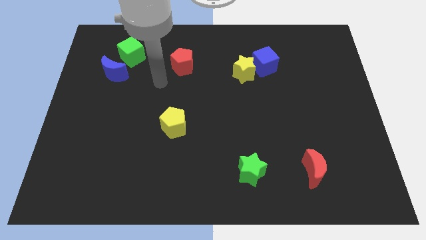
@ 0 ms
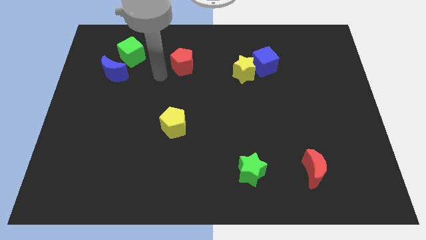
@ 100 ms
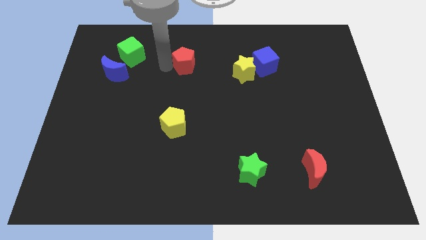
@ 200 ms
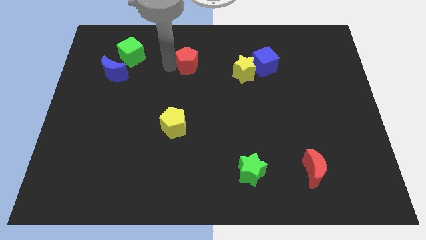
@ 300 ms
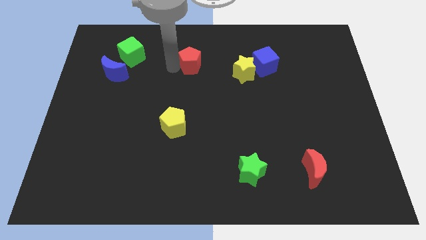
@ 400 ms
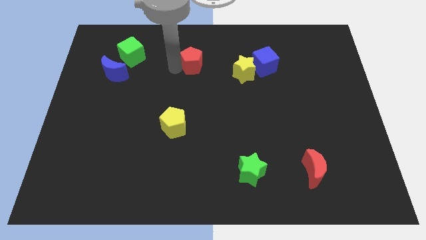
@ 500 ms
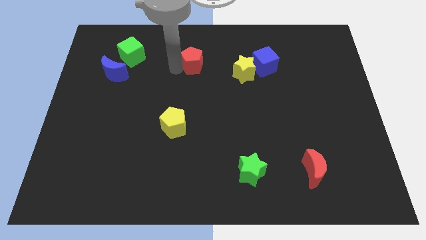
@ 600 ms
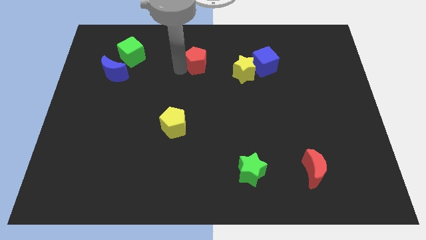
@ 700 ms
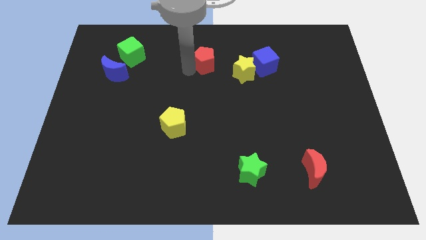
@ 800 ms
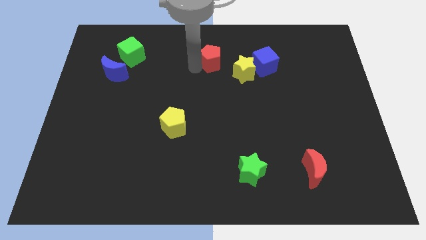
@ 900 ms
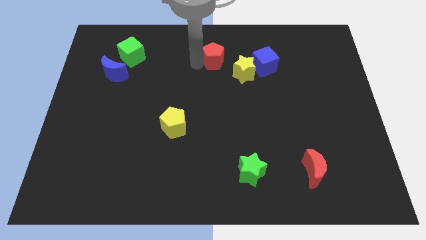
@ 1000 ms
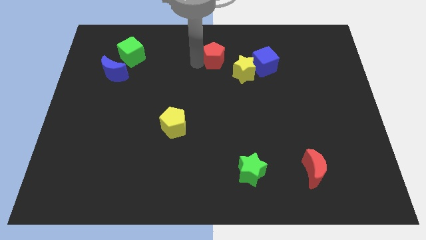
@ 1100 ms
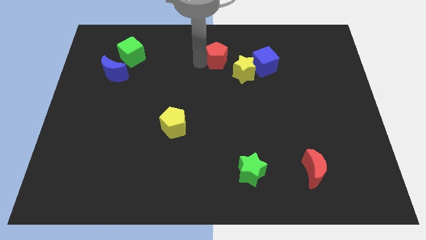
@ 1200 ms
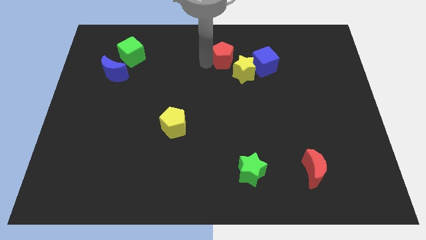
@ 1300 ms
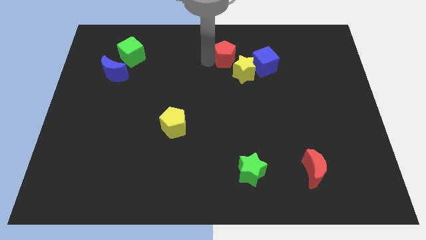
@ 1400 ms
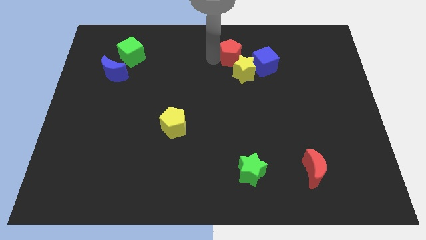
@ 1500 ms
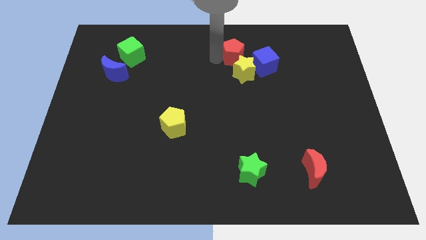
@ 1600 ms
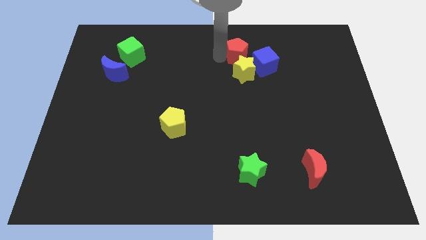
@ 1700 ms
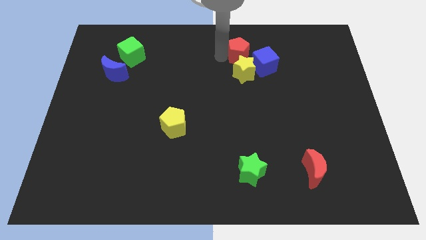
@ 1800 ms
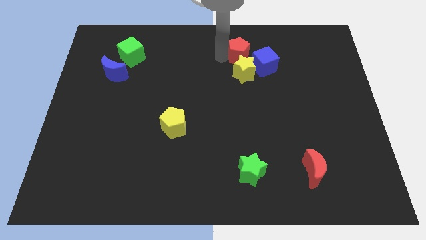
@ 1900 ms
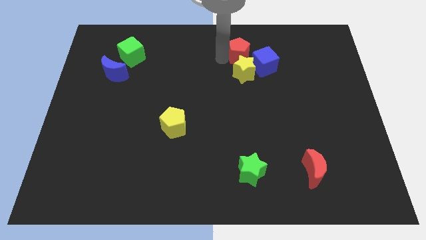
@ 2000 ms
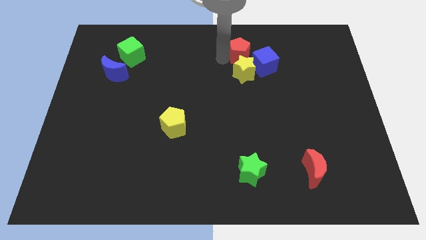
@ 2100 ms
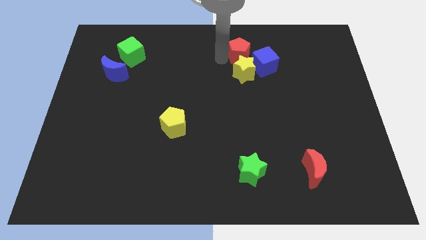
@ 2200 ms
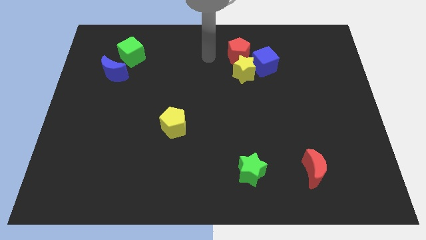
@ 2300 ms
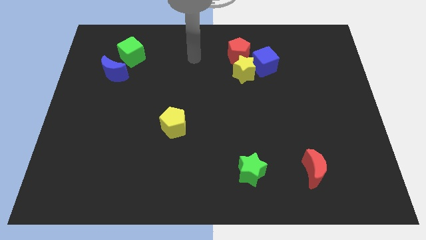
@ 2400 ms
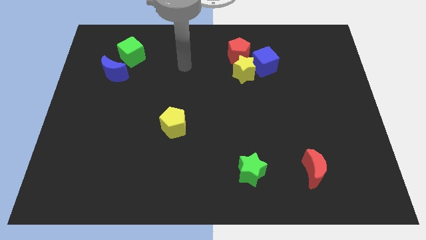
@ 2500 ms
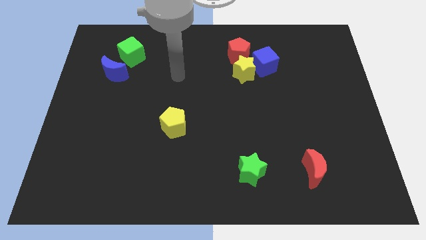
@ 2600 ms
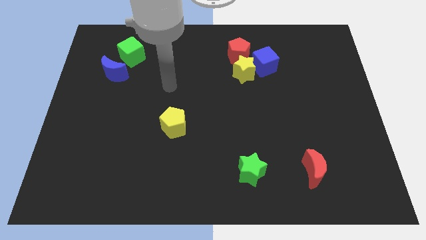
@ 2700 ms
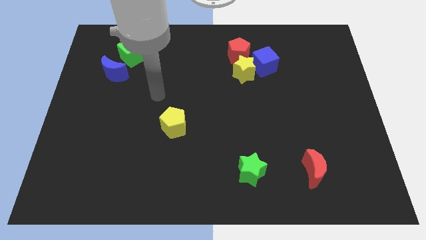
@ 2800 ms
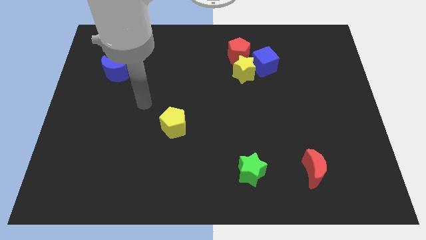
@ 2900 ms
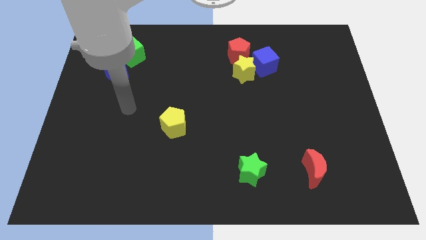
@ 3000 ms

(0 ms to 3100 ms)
place red pentagon on top of yellow star

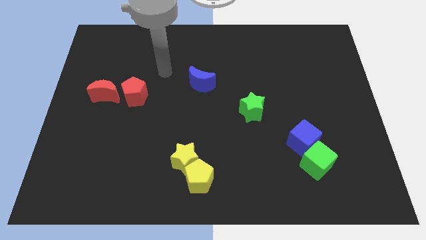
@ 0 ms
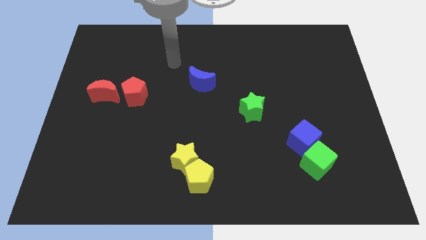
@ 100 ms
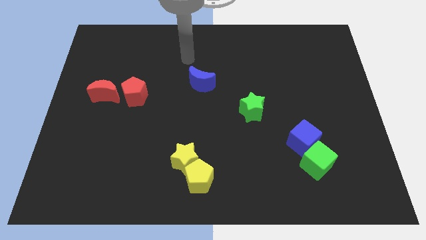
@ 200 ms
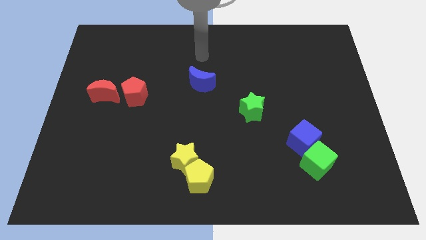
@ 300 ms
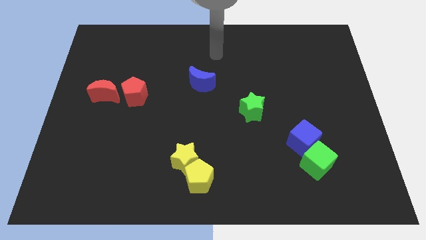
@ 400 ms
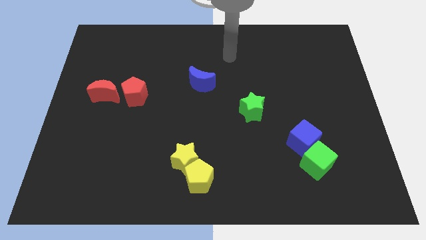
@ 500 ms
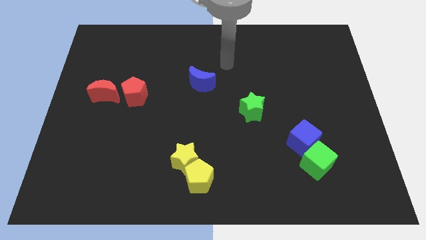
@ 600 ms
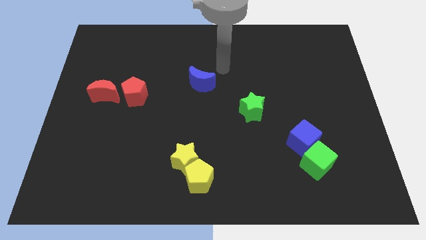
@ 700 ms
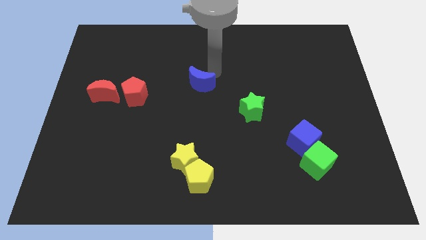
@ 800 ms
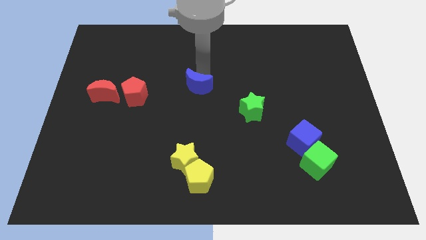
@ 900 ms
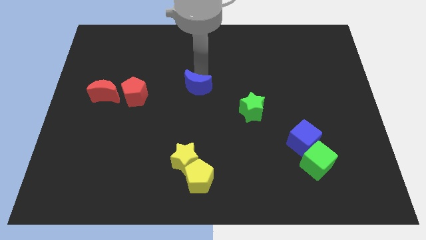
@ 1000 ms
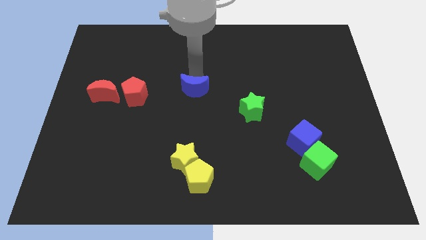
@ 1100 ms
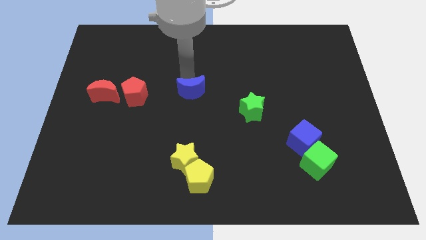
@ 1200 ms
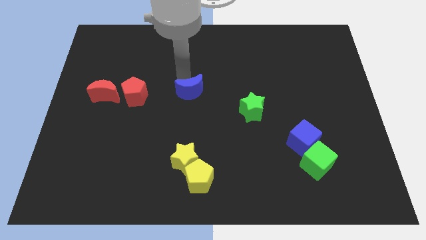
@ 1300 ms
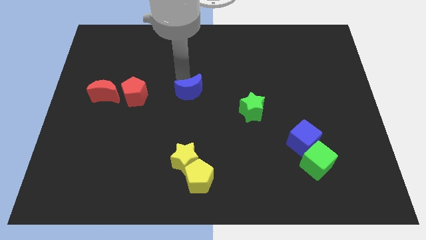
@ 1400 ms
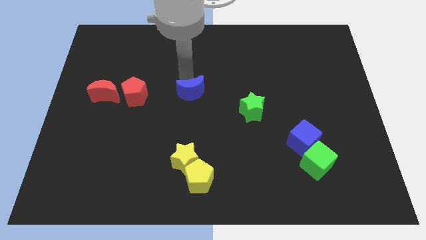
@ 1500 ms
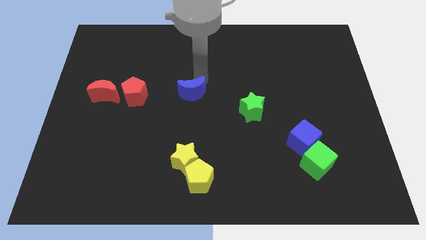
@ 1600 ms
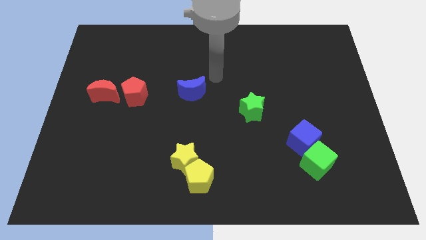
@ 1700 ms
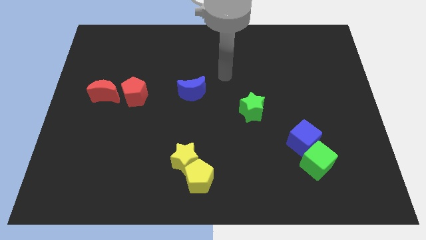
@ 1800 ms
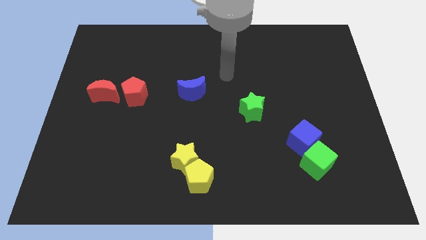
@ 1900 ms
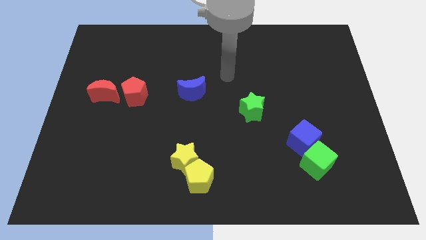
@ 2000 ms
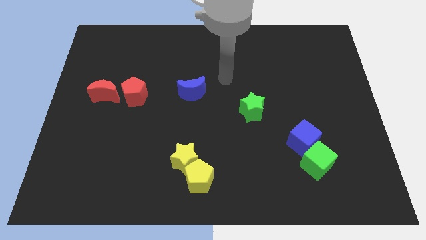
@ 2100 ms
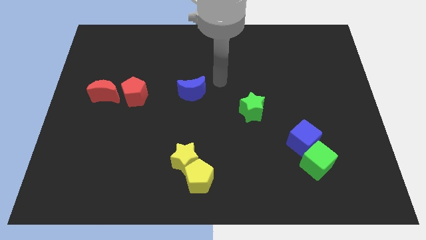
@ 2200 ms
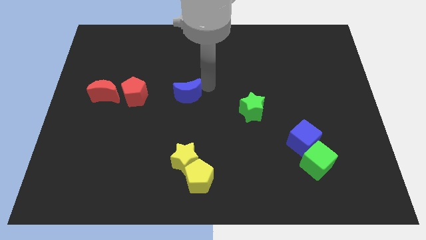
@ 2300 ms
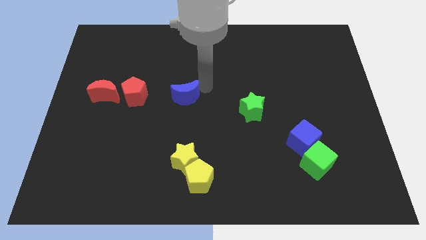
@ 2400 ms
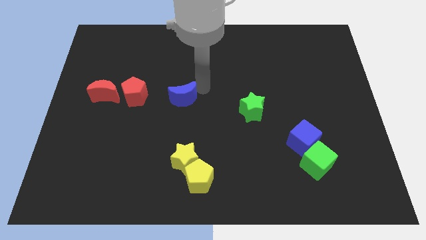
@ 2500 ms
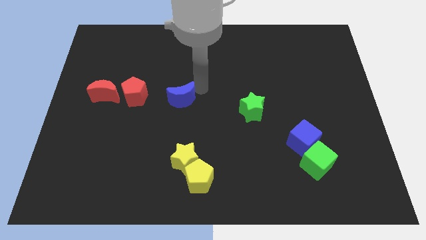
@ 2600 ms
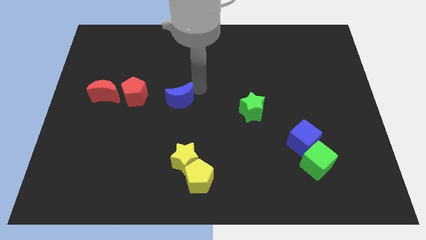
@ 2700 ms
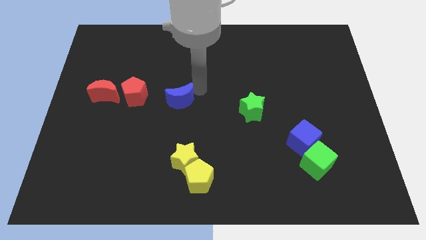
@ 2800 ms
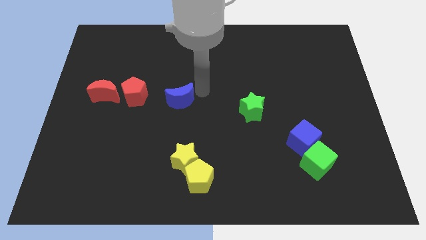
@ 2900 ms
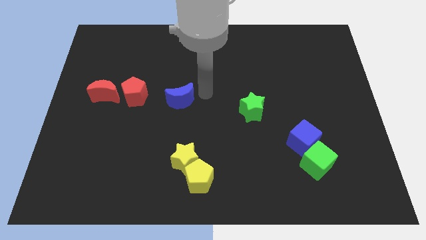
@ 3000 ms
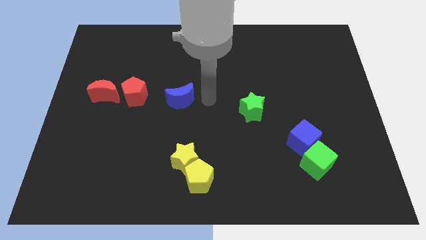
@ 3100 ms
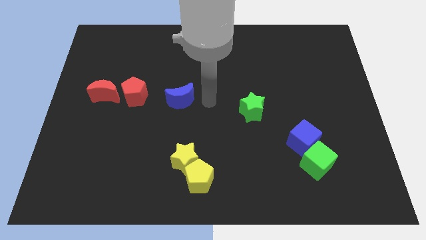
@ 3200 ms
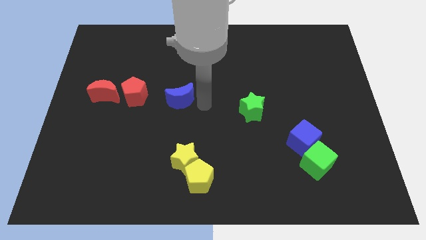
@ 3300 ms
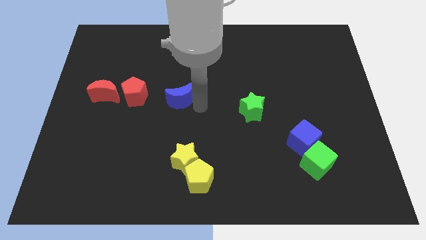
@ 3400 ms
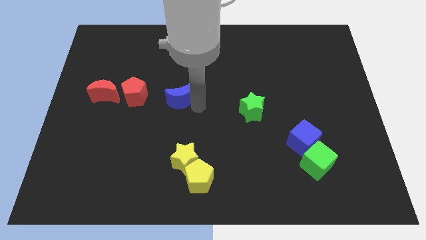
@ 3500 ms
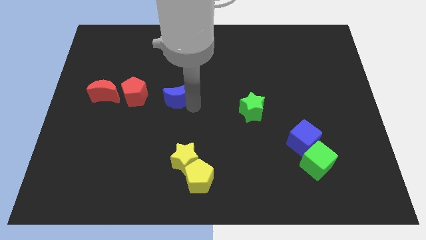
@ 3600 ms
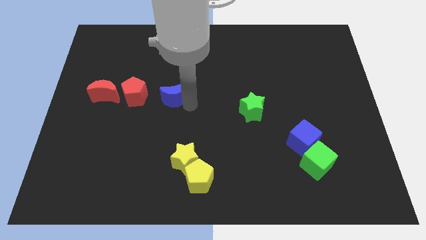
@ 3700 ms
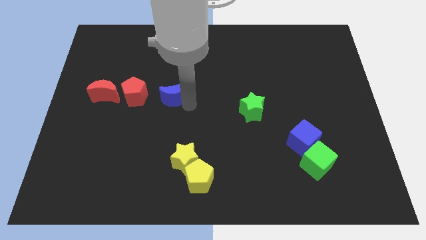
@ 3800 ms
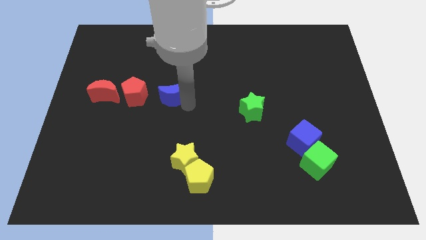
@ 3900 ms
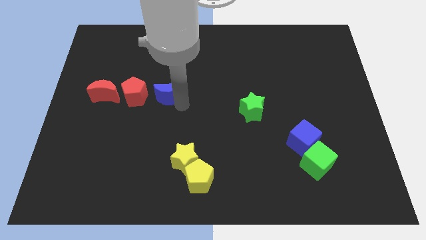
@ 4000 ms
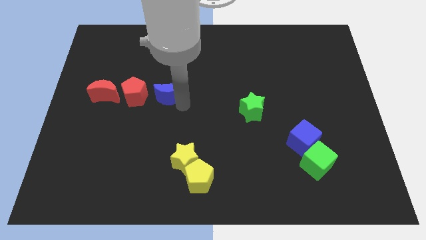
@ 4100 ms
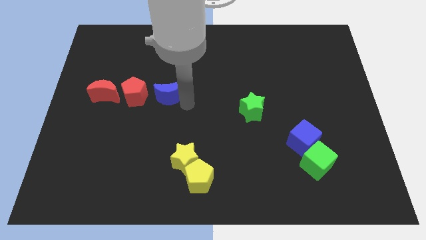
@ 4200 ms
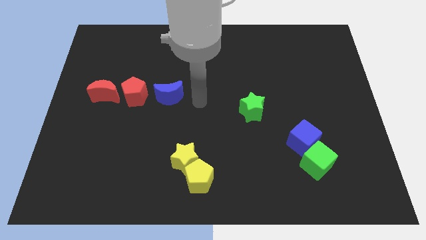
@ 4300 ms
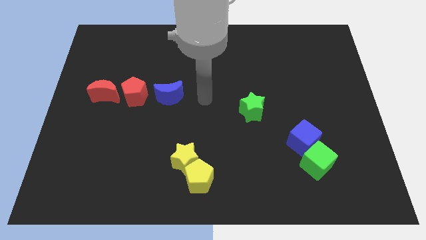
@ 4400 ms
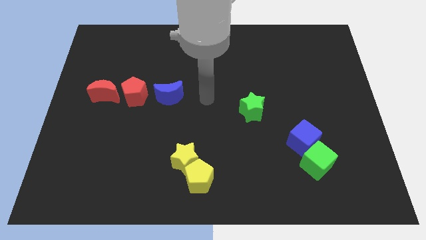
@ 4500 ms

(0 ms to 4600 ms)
push blue crescent to the right of the red pentagon

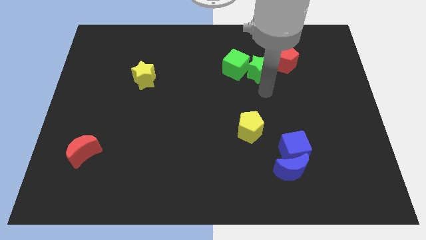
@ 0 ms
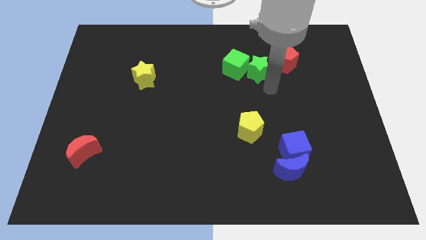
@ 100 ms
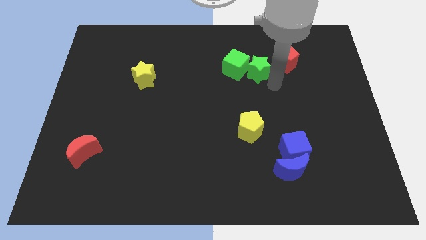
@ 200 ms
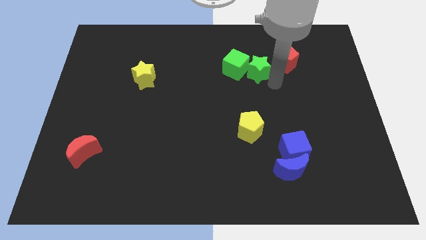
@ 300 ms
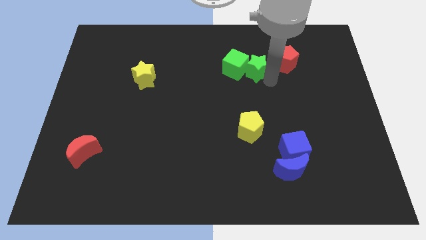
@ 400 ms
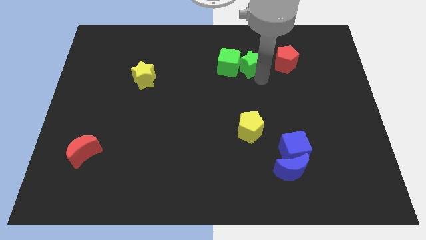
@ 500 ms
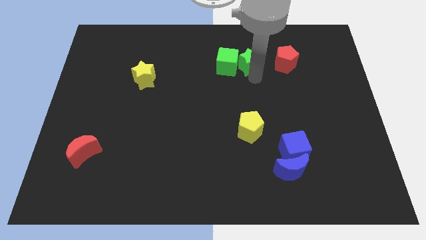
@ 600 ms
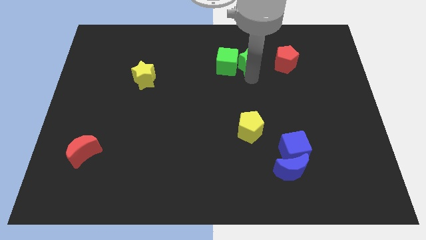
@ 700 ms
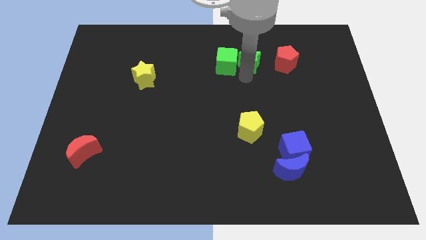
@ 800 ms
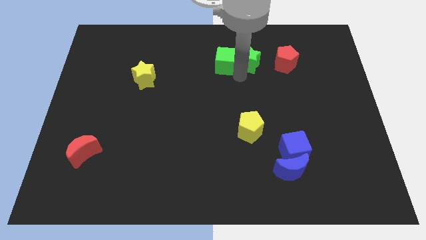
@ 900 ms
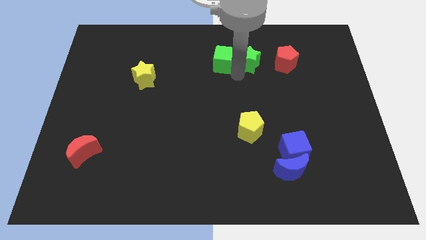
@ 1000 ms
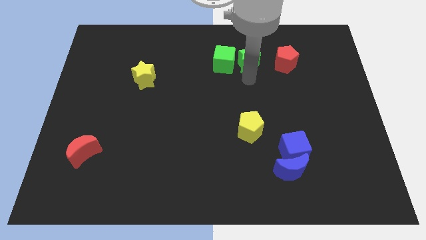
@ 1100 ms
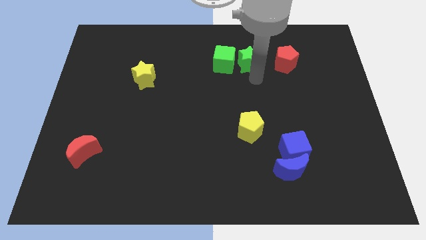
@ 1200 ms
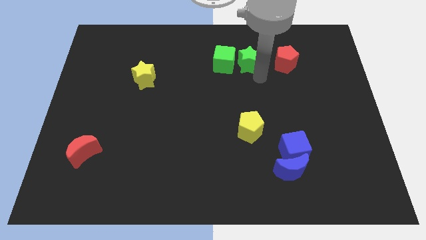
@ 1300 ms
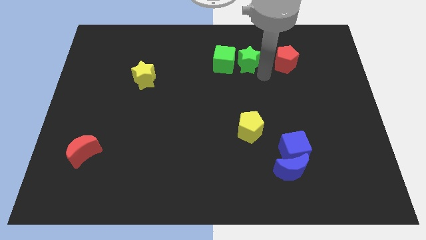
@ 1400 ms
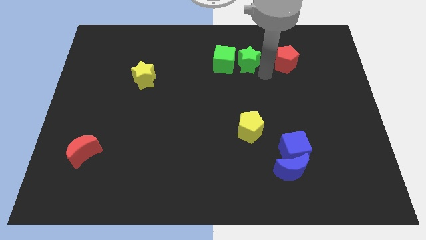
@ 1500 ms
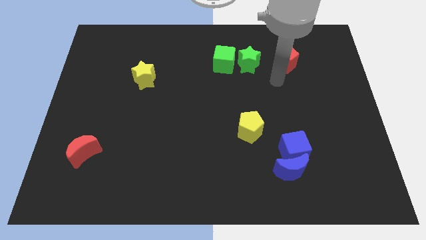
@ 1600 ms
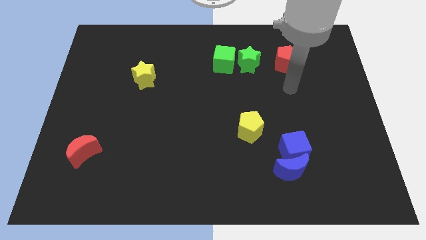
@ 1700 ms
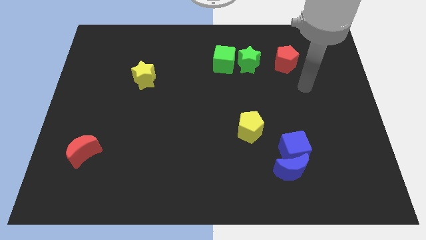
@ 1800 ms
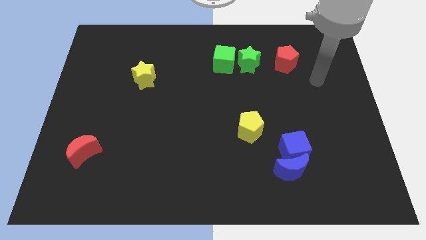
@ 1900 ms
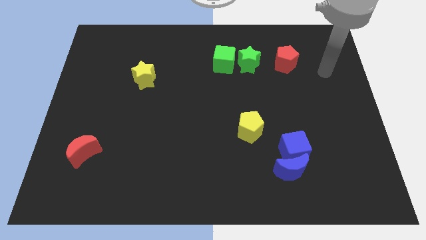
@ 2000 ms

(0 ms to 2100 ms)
put the green blocks parallel to red pentagon
